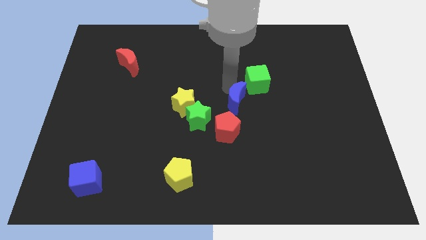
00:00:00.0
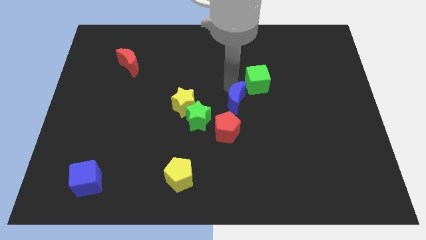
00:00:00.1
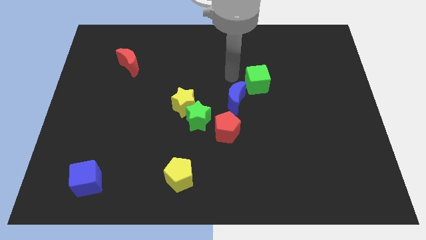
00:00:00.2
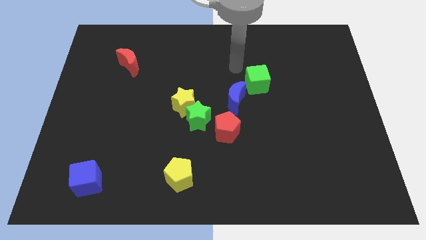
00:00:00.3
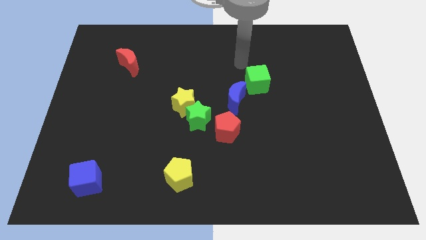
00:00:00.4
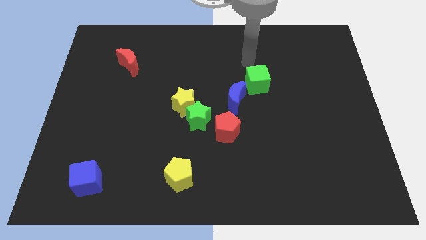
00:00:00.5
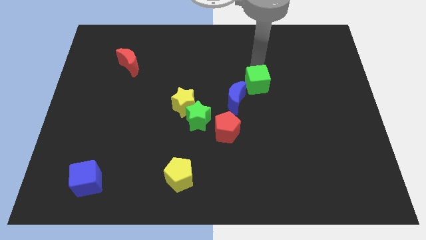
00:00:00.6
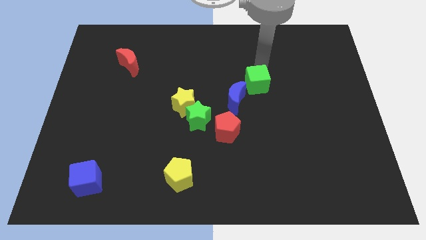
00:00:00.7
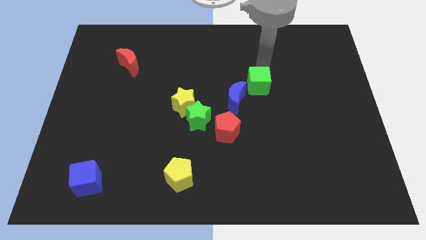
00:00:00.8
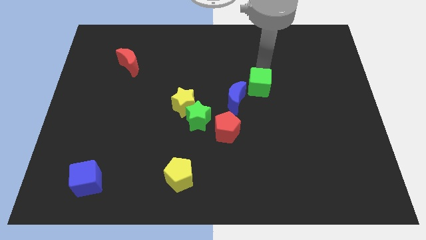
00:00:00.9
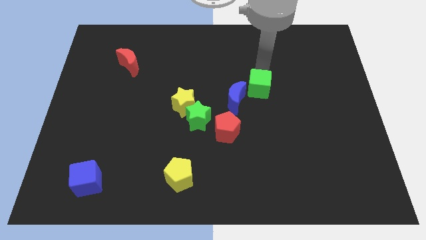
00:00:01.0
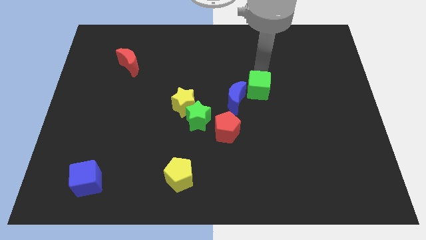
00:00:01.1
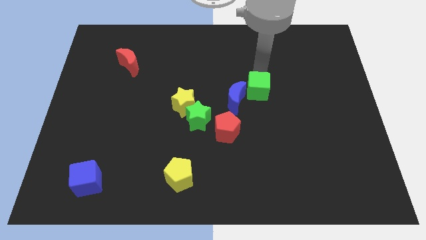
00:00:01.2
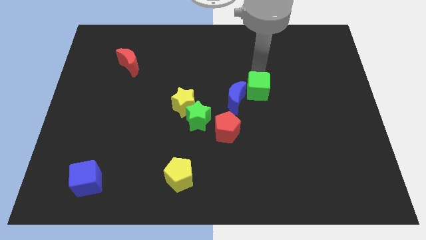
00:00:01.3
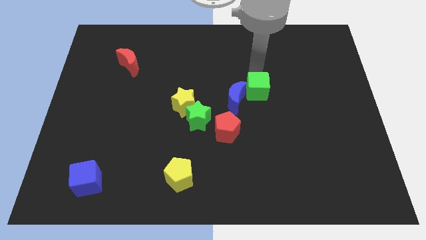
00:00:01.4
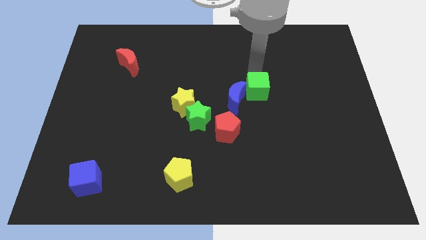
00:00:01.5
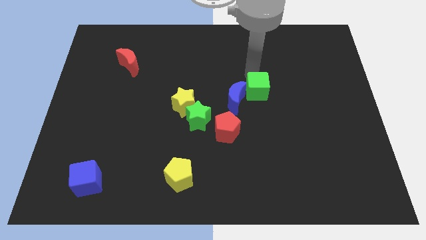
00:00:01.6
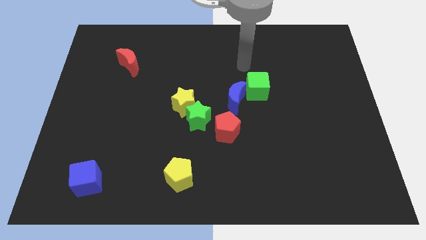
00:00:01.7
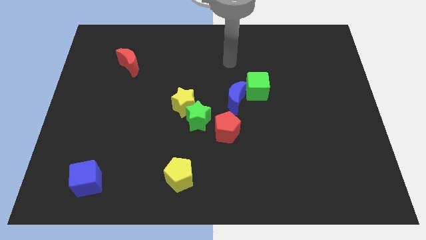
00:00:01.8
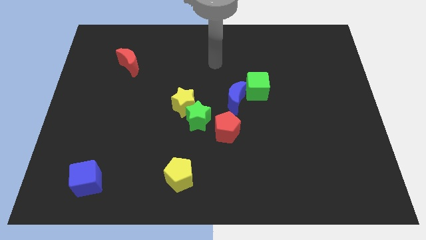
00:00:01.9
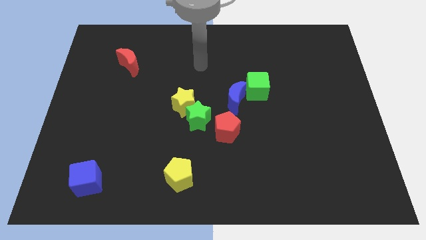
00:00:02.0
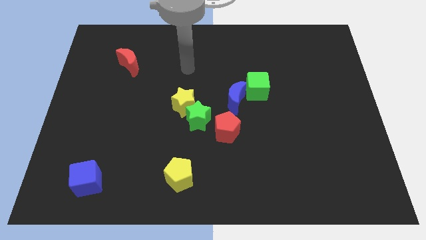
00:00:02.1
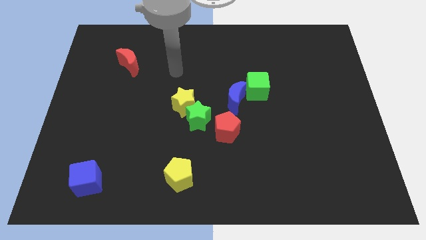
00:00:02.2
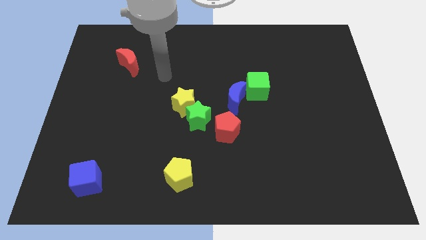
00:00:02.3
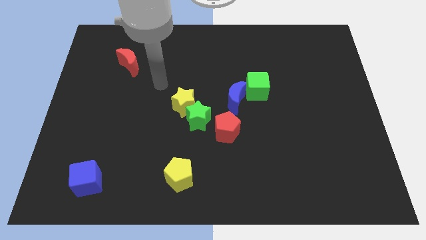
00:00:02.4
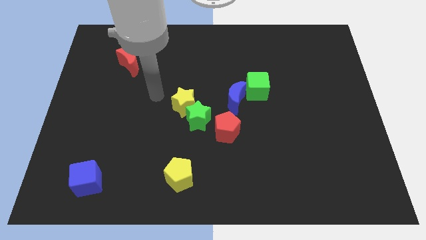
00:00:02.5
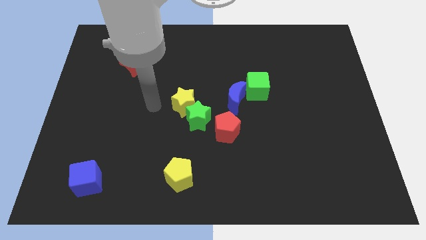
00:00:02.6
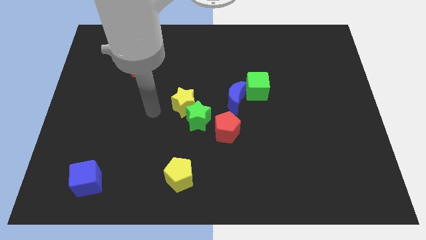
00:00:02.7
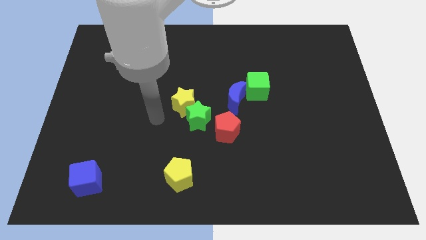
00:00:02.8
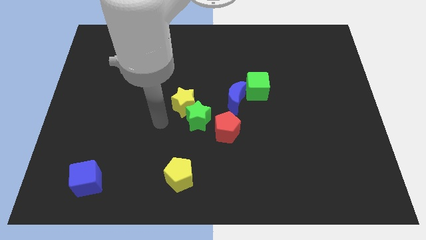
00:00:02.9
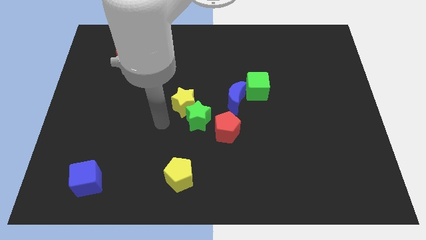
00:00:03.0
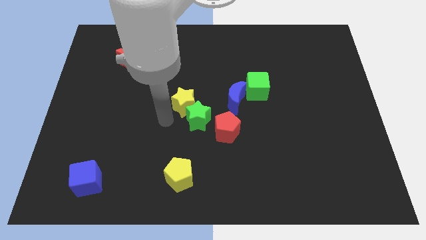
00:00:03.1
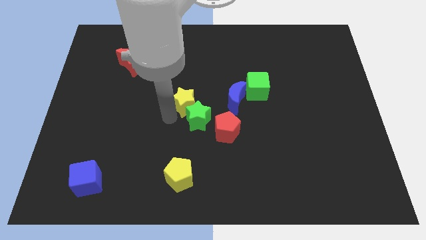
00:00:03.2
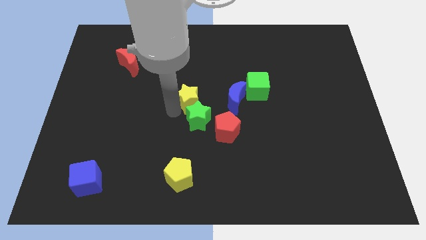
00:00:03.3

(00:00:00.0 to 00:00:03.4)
slightly push yellow star upwards a bit

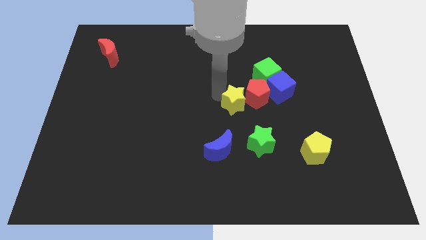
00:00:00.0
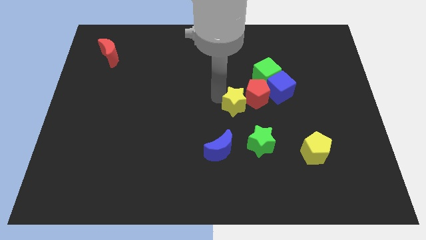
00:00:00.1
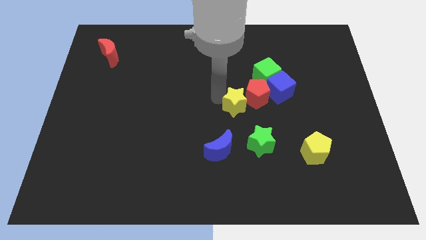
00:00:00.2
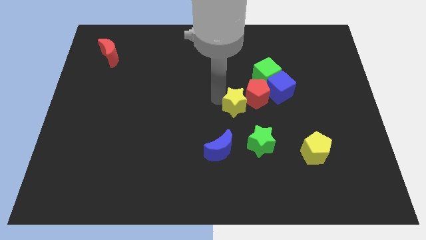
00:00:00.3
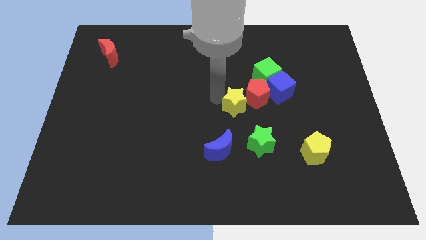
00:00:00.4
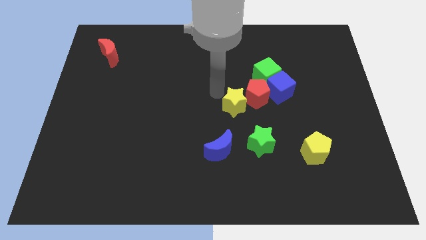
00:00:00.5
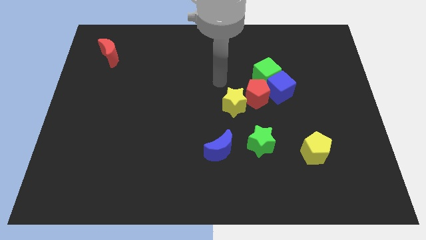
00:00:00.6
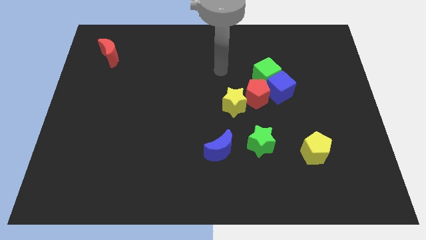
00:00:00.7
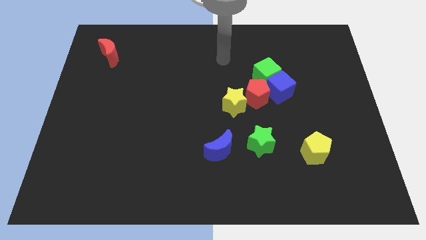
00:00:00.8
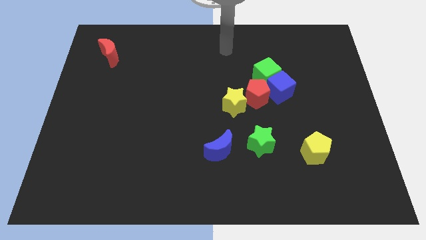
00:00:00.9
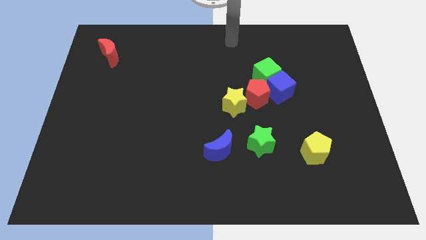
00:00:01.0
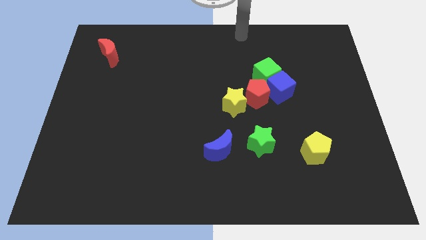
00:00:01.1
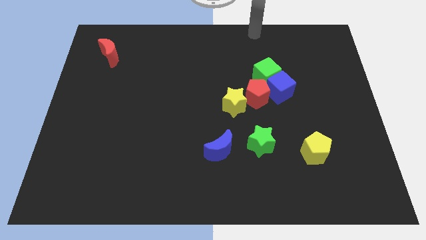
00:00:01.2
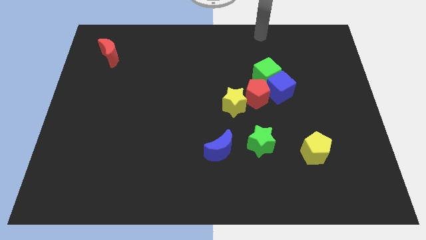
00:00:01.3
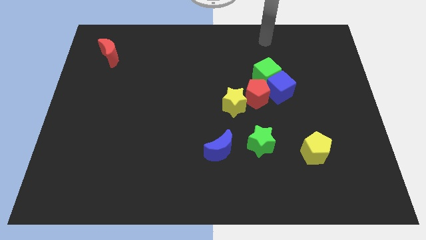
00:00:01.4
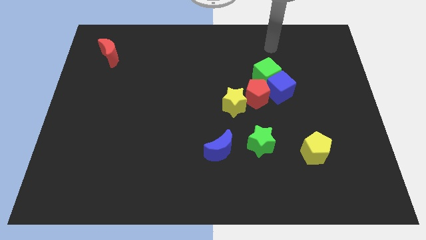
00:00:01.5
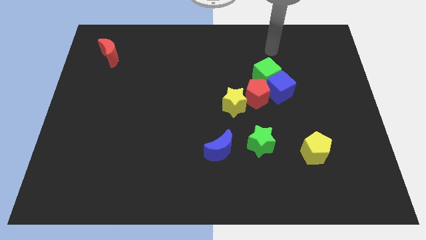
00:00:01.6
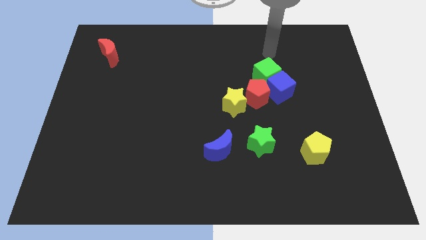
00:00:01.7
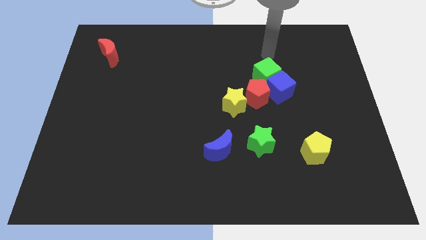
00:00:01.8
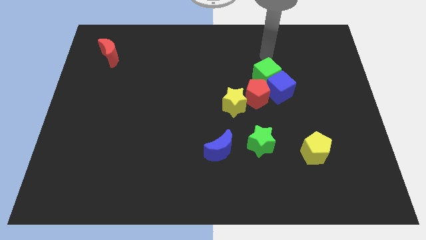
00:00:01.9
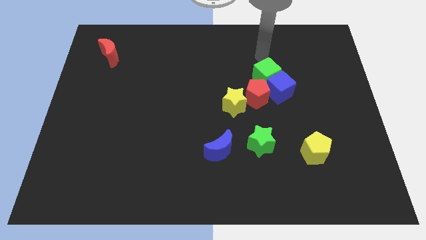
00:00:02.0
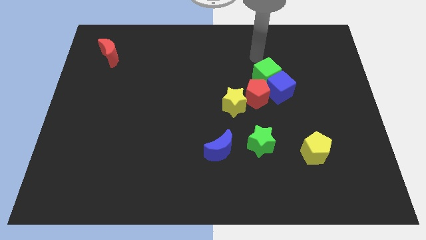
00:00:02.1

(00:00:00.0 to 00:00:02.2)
move the arm close to the green cube

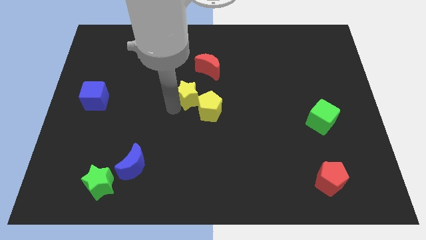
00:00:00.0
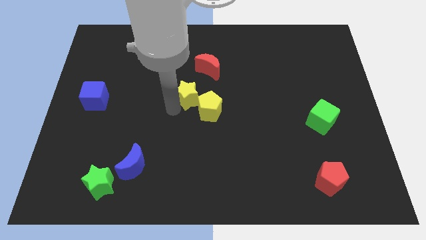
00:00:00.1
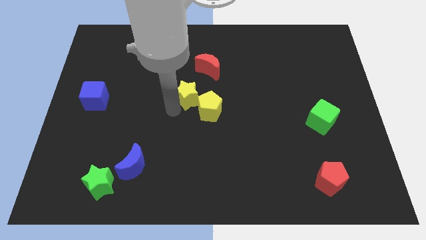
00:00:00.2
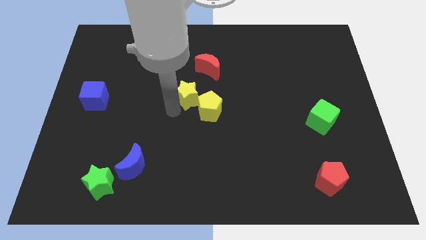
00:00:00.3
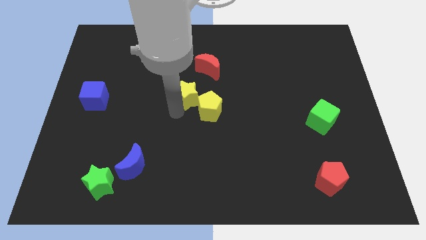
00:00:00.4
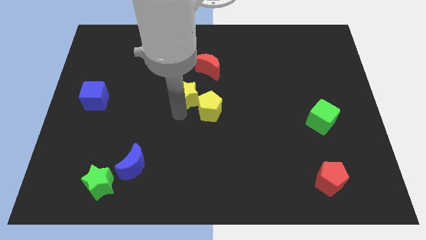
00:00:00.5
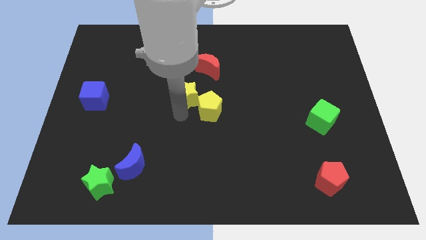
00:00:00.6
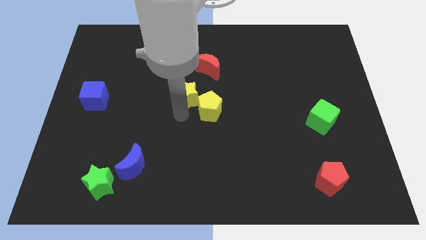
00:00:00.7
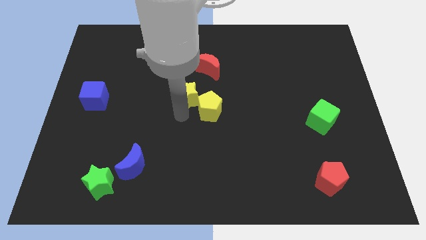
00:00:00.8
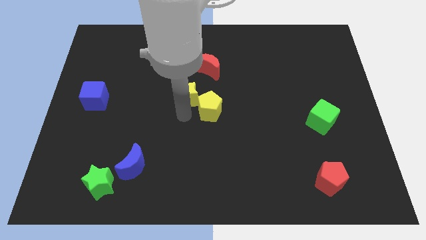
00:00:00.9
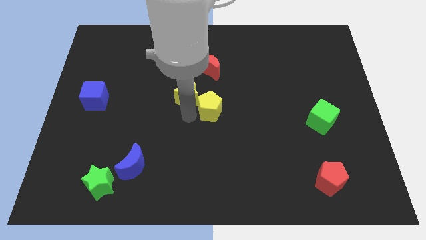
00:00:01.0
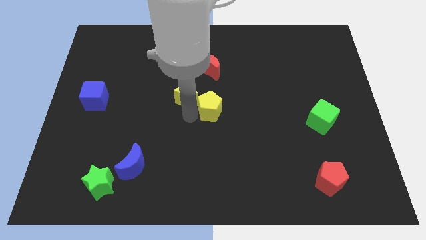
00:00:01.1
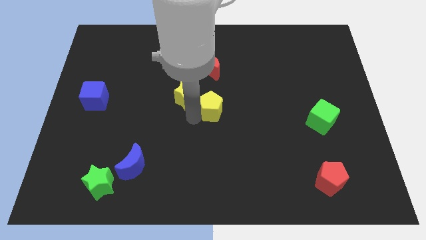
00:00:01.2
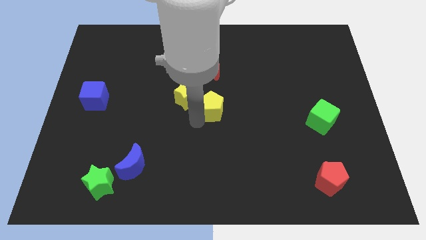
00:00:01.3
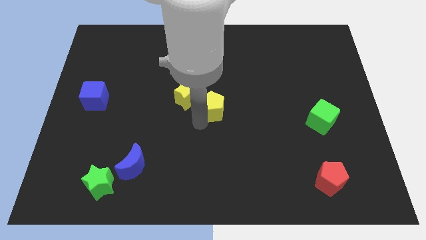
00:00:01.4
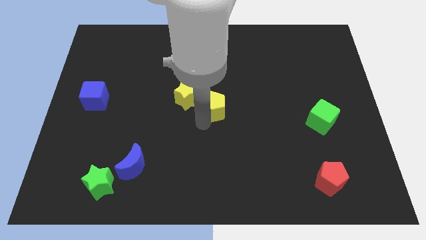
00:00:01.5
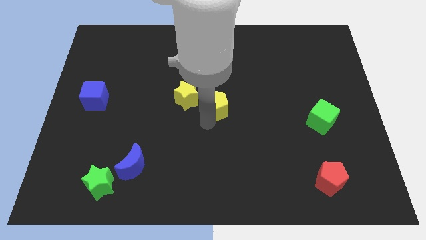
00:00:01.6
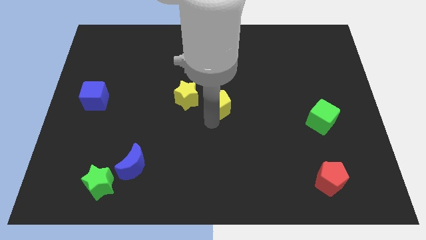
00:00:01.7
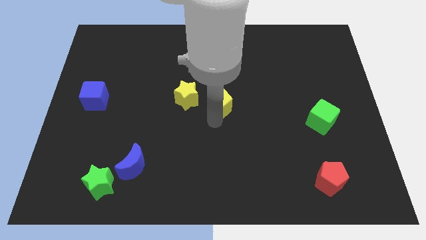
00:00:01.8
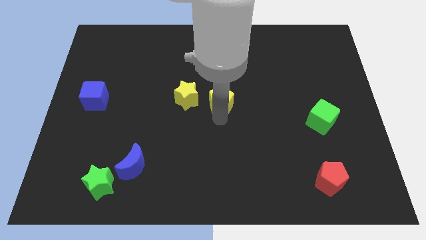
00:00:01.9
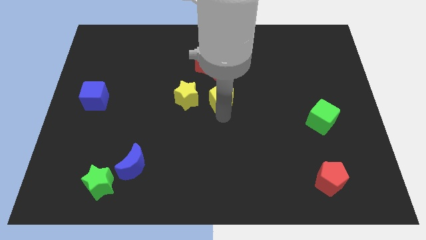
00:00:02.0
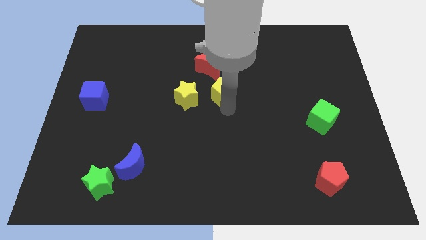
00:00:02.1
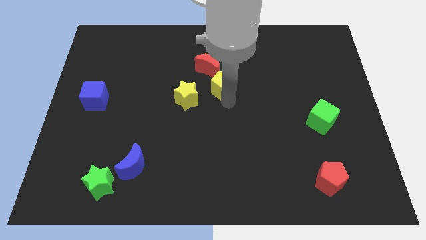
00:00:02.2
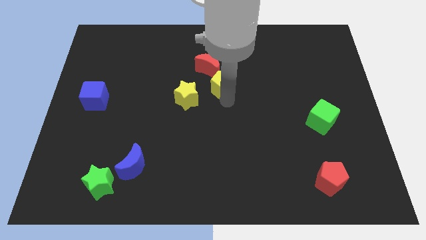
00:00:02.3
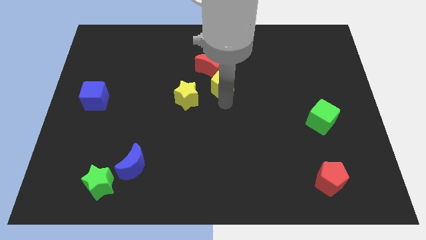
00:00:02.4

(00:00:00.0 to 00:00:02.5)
separate the yellow pentagon from the yellow star

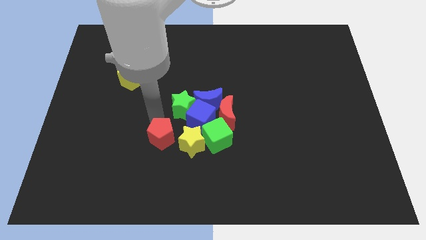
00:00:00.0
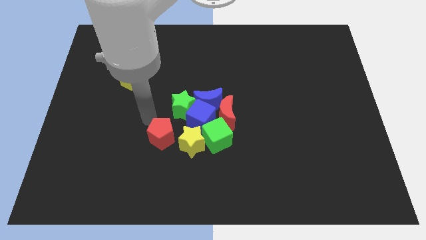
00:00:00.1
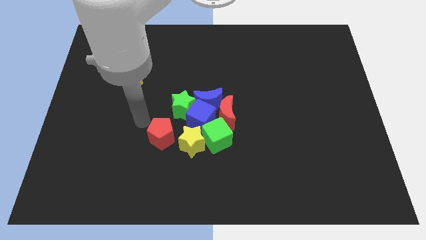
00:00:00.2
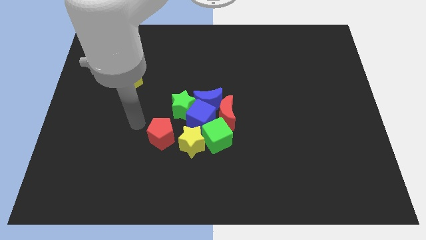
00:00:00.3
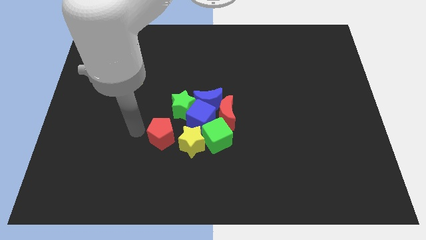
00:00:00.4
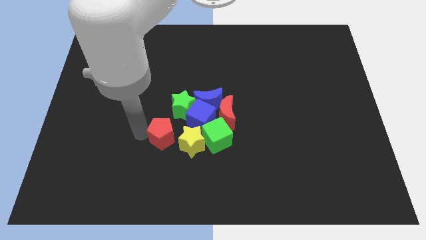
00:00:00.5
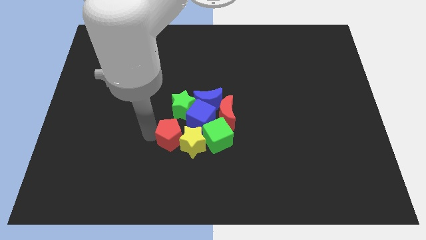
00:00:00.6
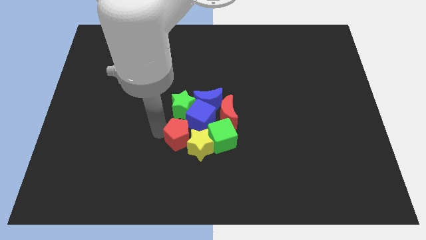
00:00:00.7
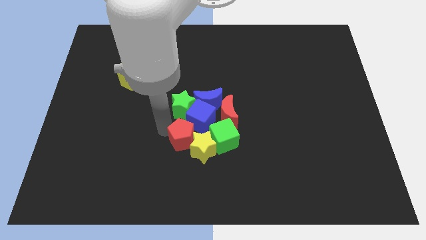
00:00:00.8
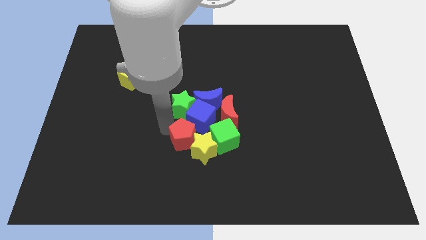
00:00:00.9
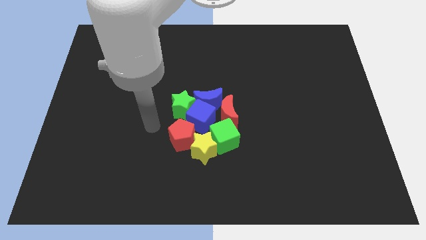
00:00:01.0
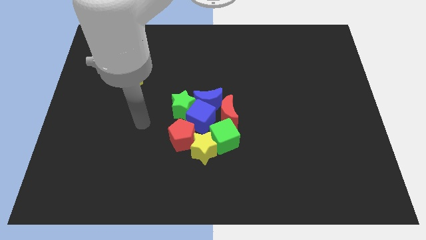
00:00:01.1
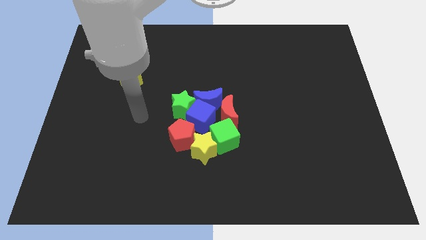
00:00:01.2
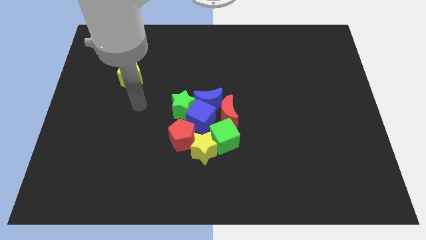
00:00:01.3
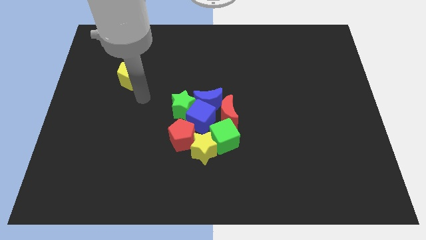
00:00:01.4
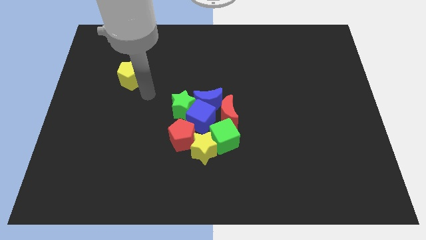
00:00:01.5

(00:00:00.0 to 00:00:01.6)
push red pentagon into the group of objects
